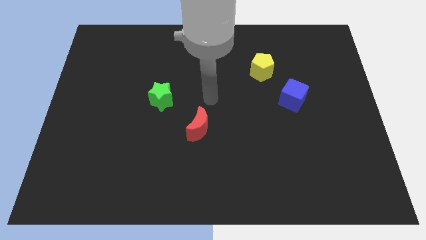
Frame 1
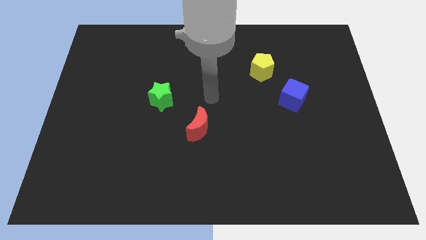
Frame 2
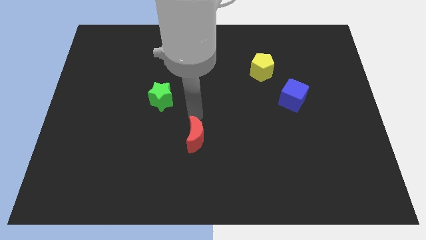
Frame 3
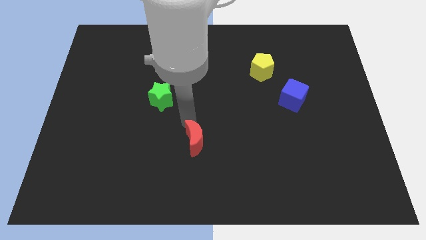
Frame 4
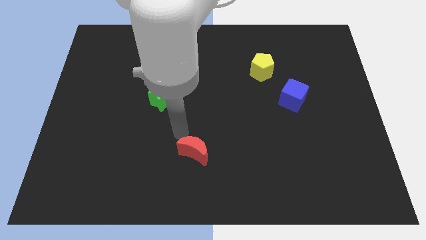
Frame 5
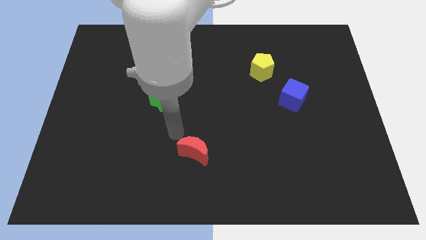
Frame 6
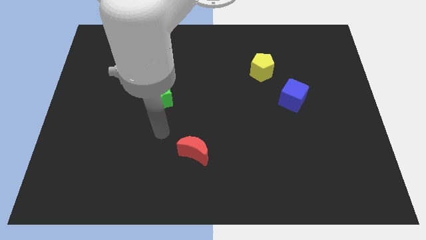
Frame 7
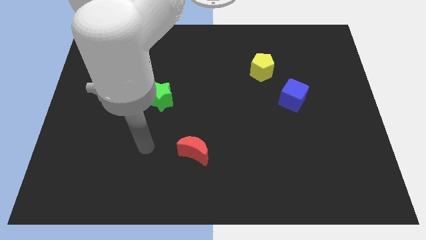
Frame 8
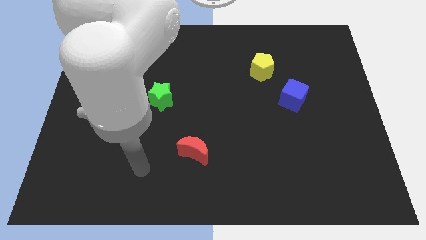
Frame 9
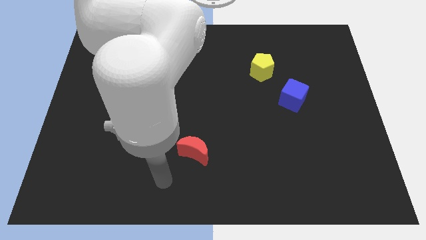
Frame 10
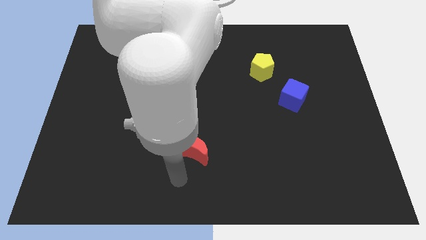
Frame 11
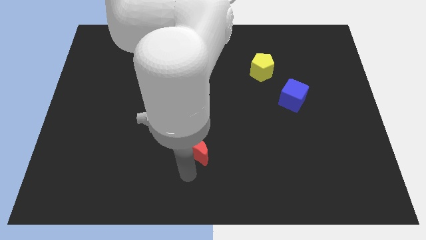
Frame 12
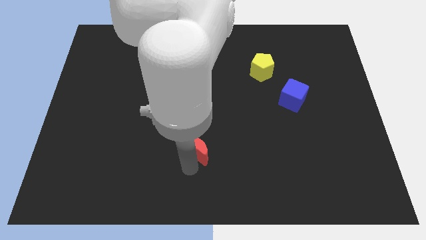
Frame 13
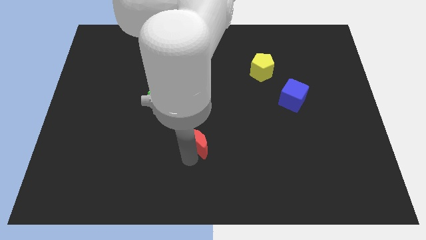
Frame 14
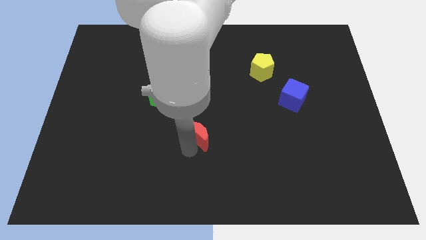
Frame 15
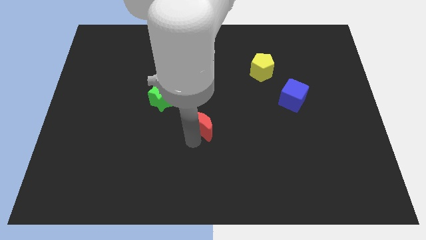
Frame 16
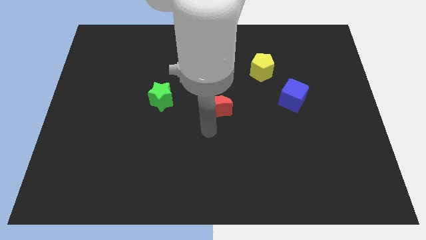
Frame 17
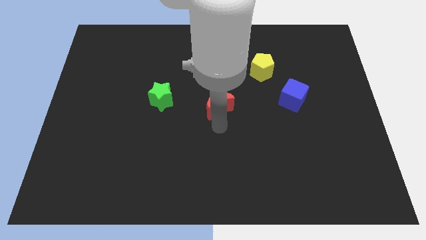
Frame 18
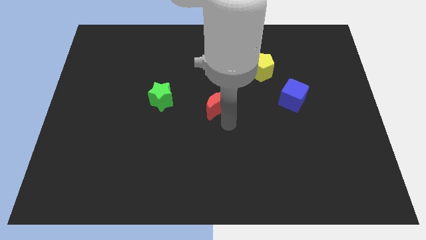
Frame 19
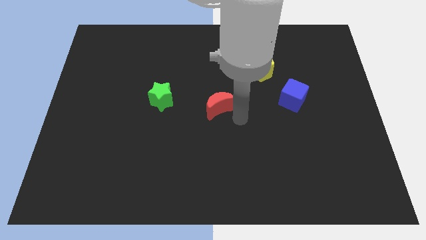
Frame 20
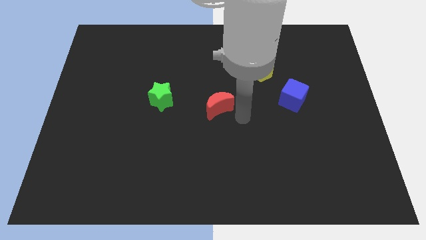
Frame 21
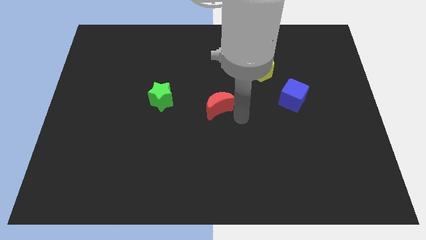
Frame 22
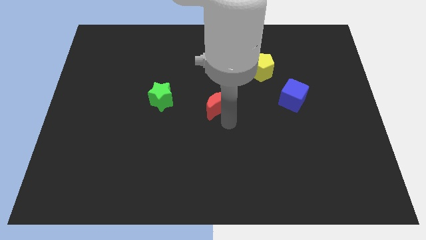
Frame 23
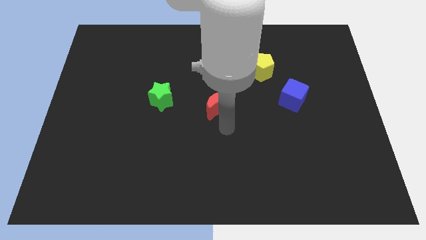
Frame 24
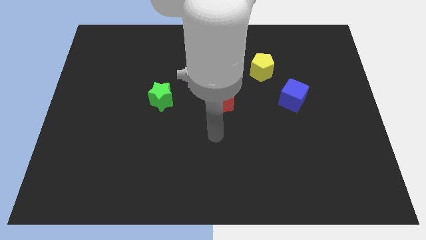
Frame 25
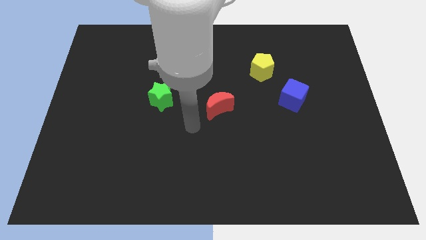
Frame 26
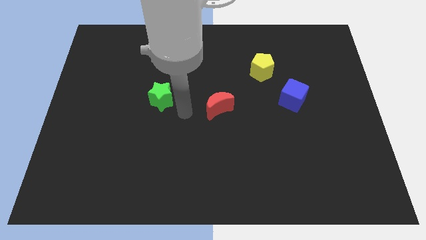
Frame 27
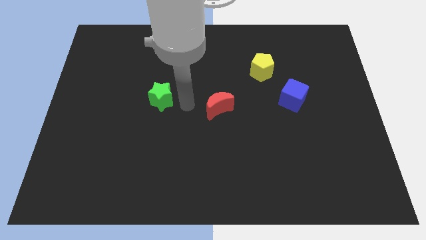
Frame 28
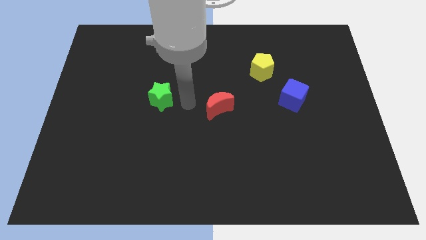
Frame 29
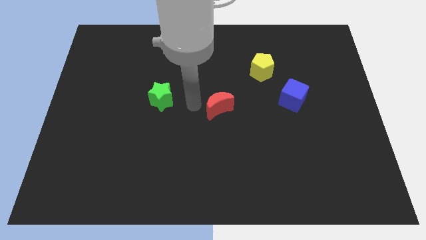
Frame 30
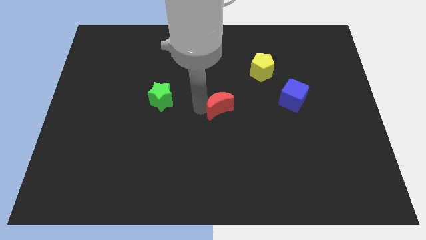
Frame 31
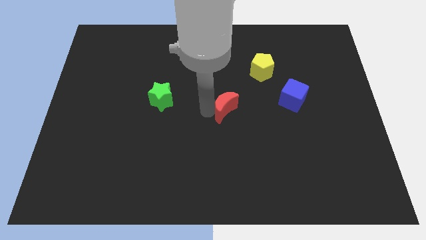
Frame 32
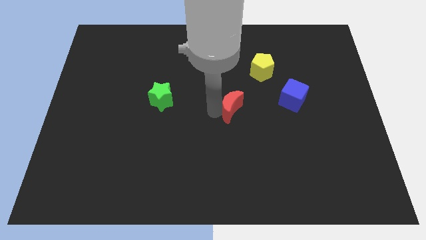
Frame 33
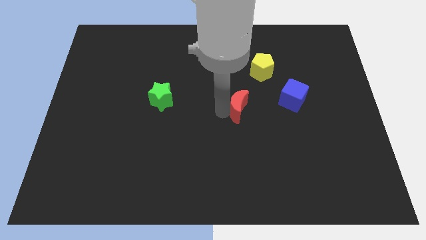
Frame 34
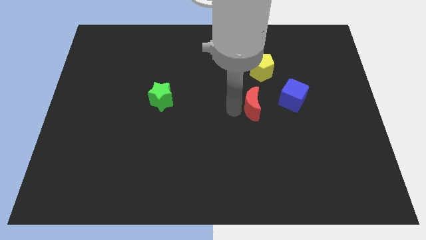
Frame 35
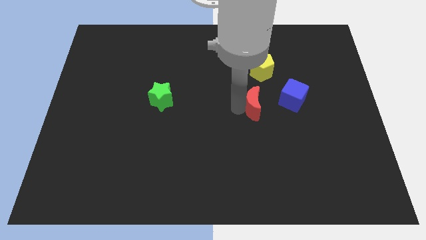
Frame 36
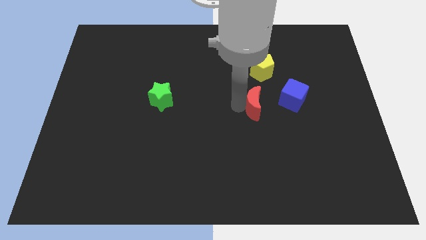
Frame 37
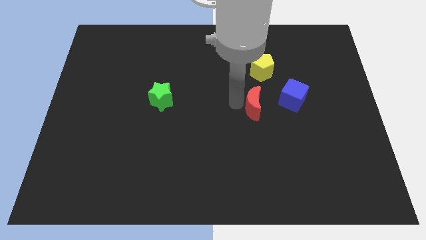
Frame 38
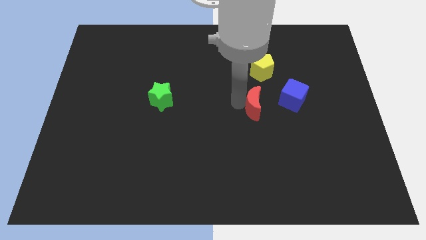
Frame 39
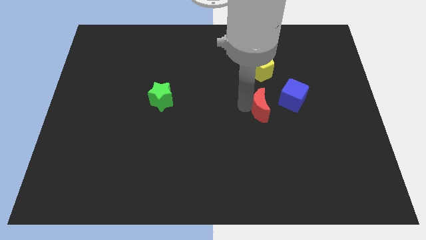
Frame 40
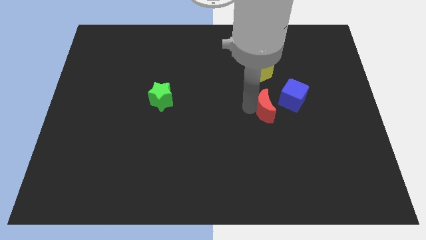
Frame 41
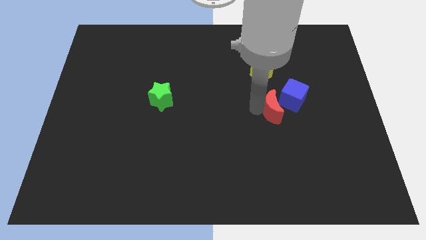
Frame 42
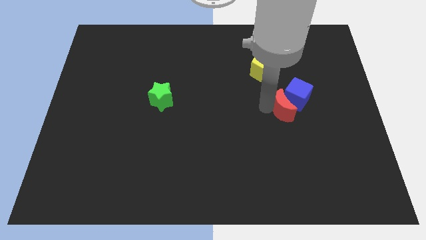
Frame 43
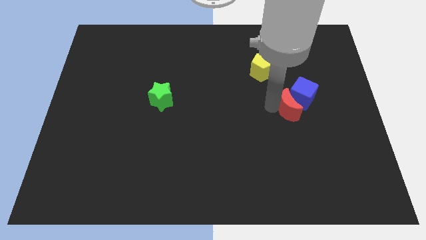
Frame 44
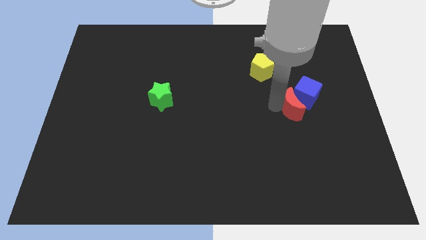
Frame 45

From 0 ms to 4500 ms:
slide the red block next to the blue cube

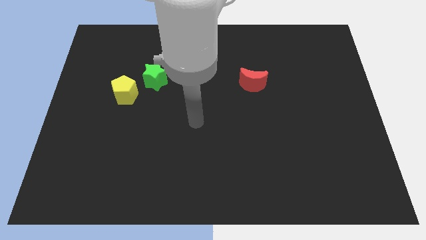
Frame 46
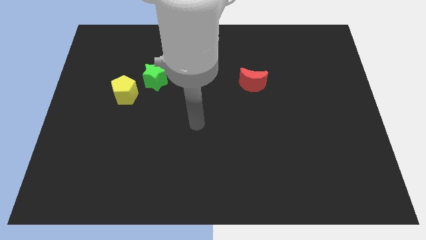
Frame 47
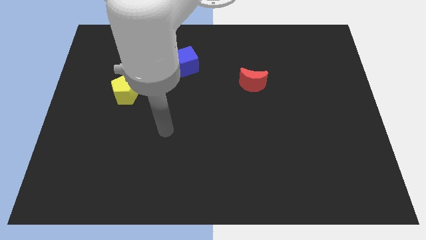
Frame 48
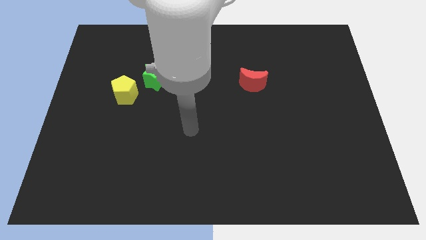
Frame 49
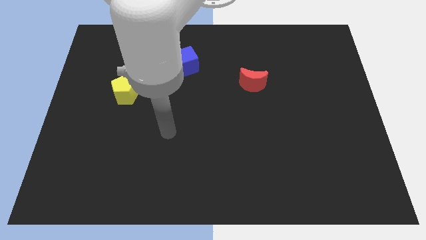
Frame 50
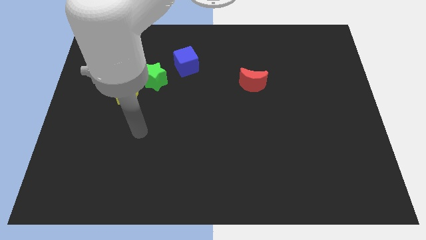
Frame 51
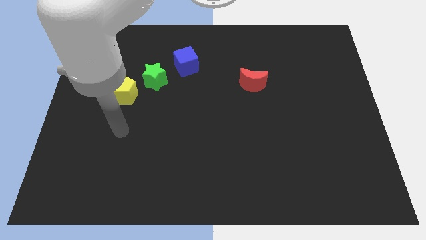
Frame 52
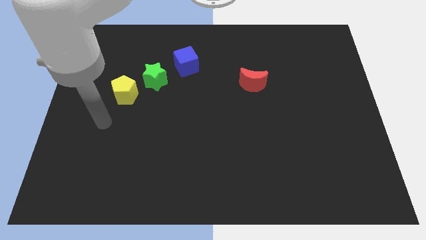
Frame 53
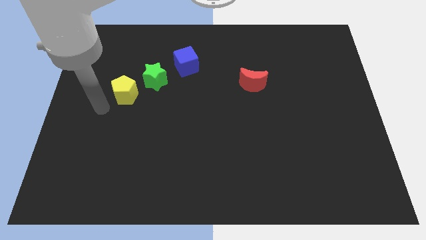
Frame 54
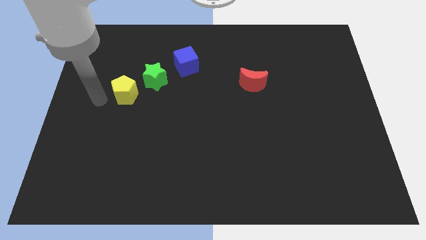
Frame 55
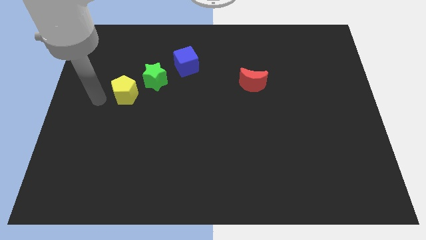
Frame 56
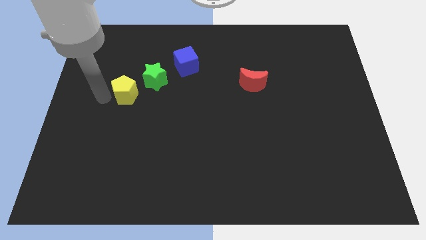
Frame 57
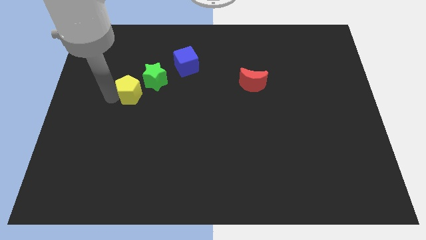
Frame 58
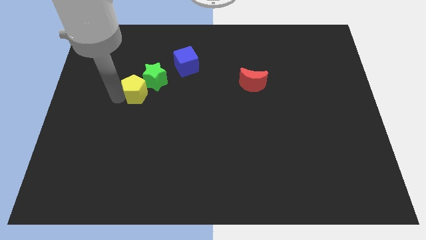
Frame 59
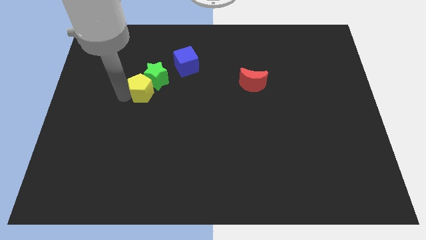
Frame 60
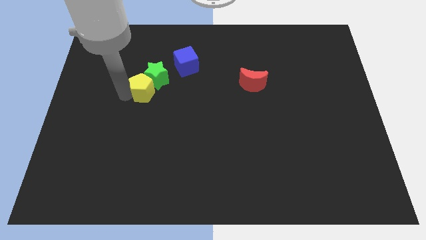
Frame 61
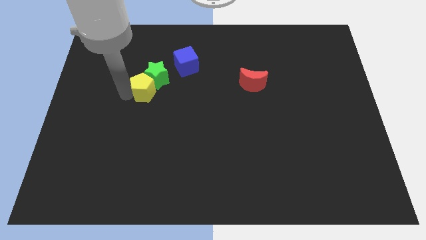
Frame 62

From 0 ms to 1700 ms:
push the pentagon to the green star

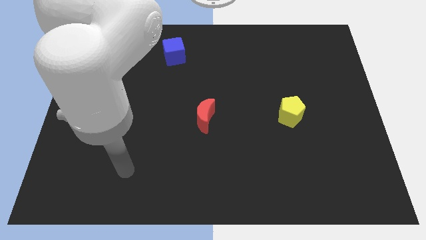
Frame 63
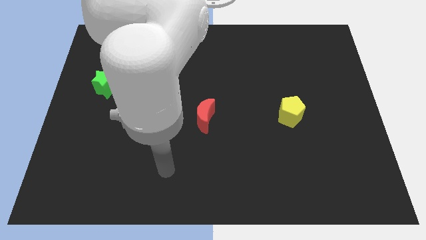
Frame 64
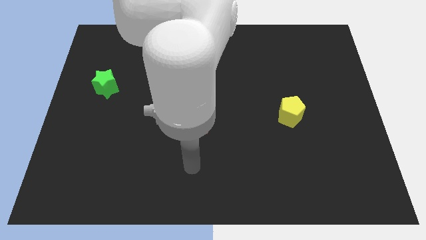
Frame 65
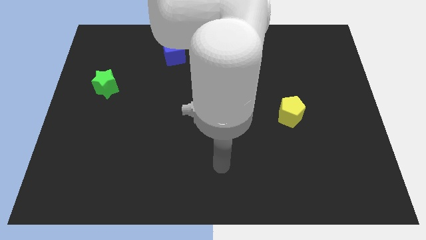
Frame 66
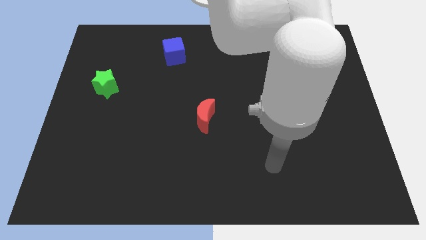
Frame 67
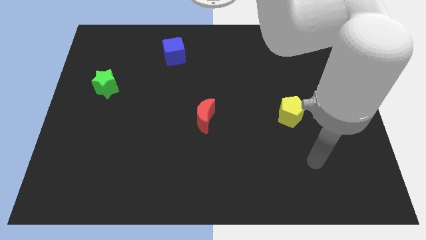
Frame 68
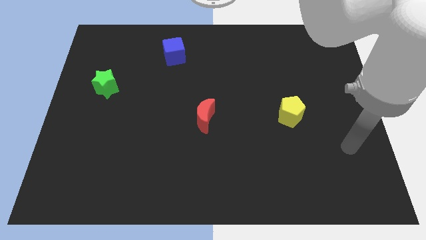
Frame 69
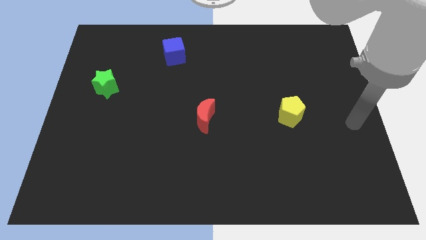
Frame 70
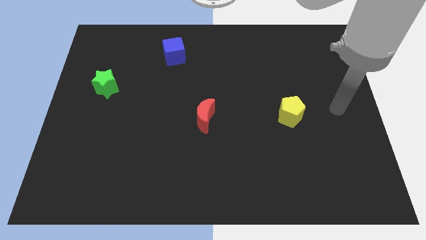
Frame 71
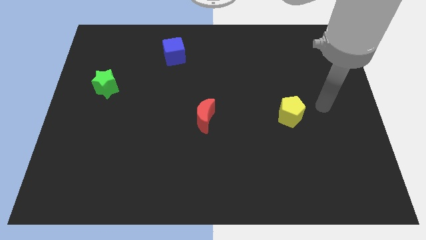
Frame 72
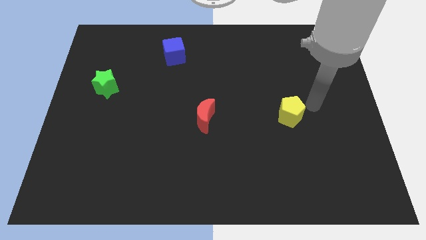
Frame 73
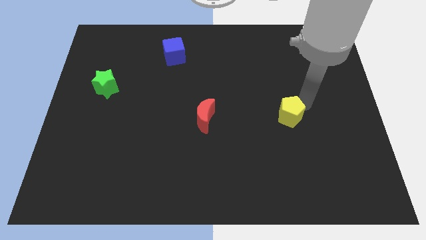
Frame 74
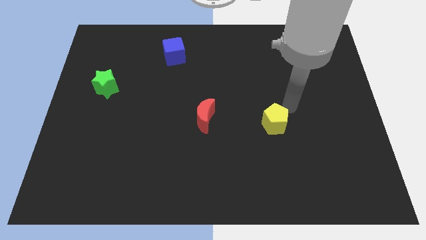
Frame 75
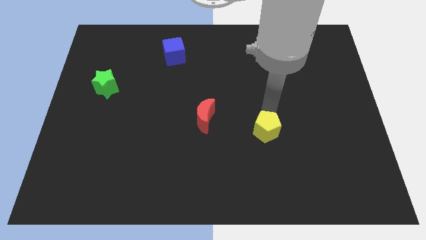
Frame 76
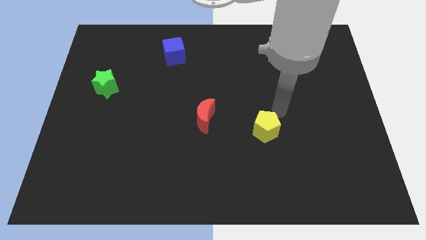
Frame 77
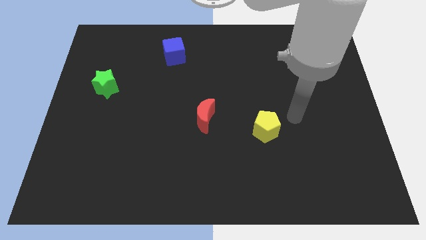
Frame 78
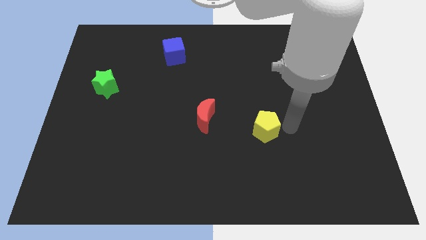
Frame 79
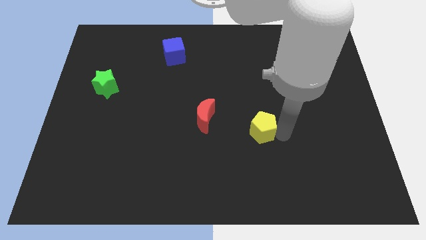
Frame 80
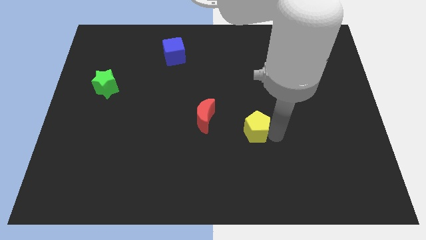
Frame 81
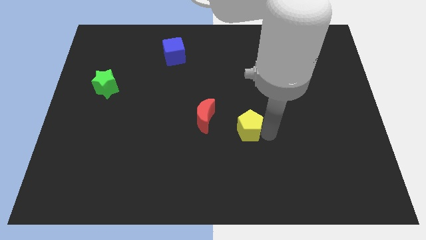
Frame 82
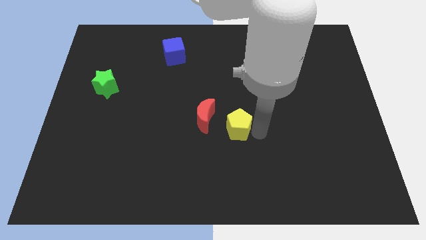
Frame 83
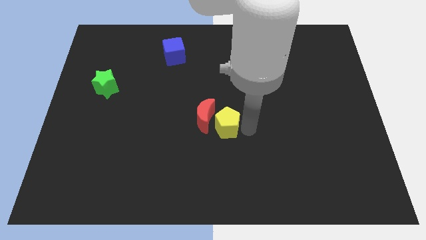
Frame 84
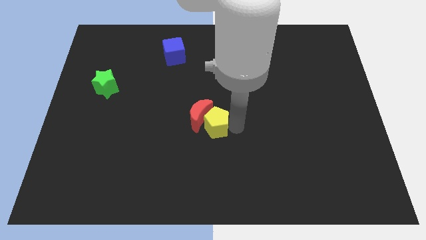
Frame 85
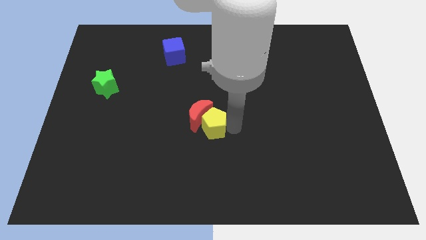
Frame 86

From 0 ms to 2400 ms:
move the yellow block towards the red moon
